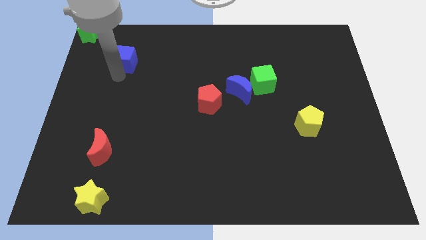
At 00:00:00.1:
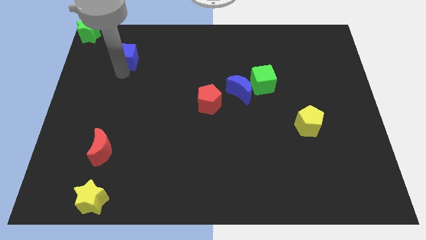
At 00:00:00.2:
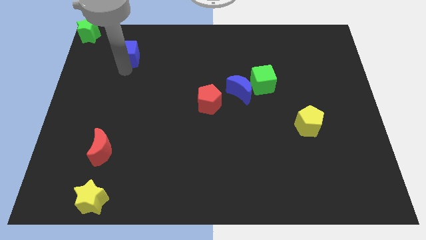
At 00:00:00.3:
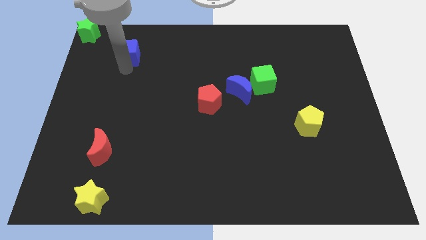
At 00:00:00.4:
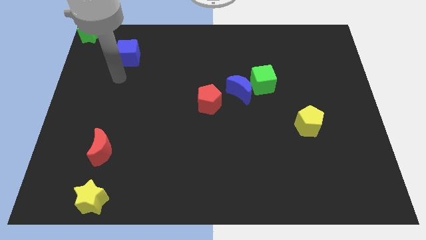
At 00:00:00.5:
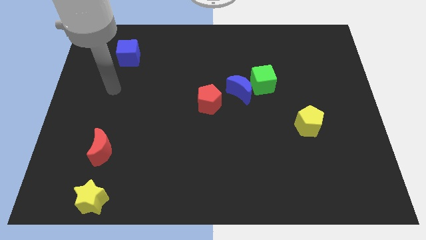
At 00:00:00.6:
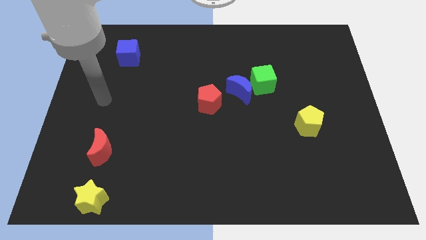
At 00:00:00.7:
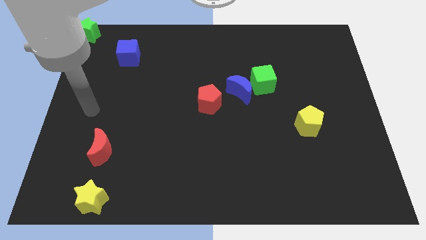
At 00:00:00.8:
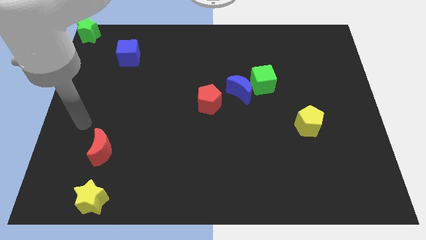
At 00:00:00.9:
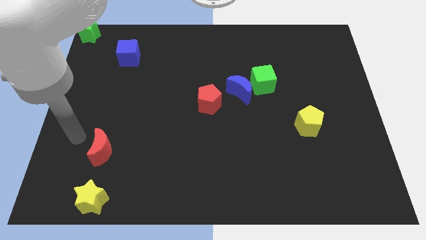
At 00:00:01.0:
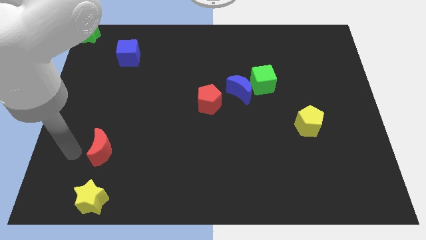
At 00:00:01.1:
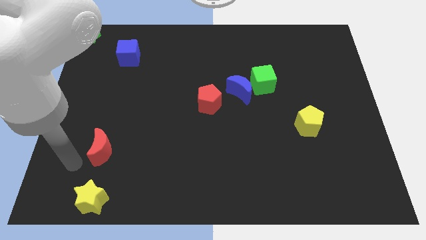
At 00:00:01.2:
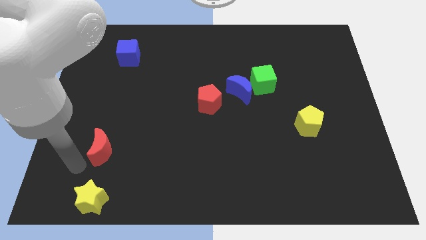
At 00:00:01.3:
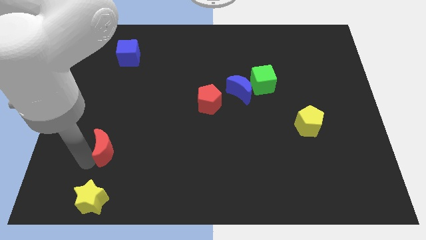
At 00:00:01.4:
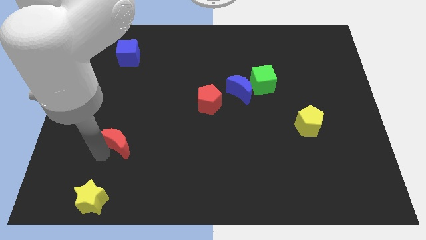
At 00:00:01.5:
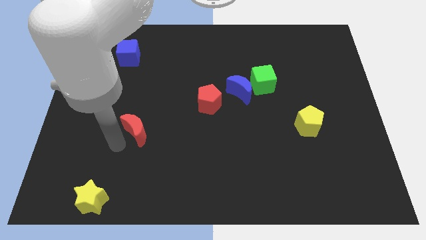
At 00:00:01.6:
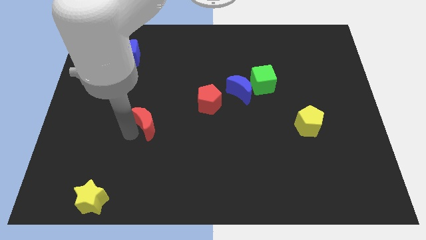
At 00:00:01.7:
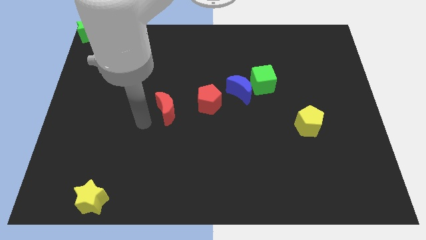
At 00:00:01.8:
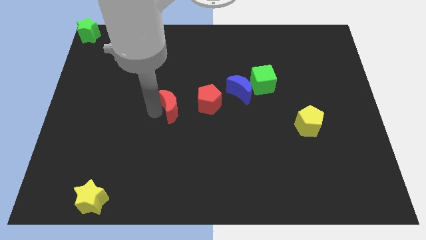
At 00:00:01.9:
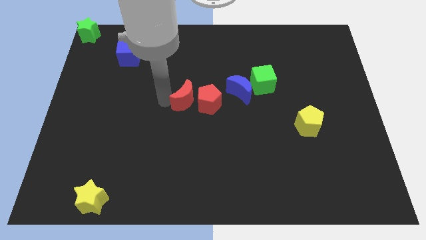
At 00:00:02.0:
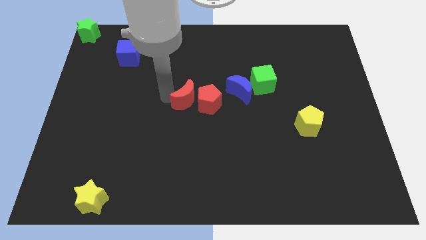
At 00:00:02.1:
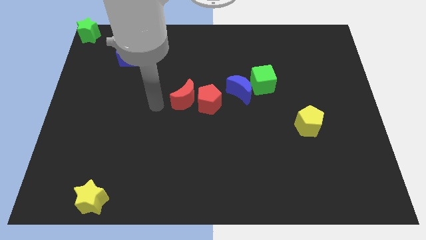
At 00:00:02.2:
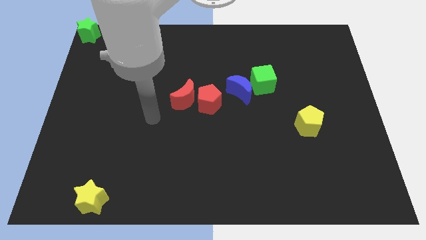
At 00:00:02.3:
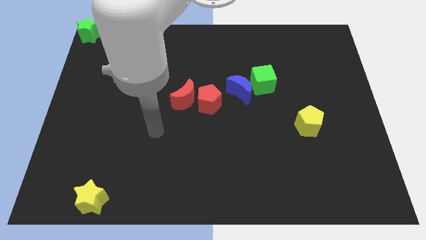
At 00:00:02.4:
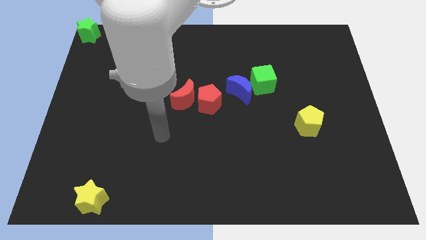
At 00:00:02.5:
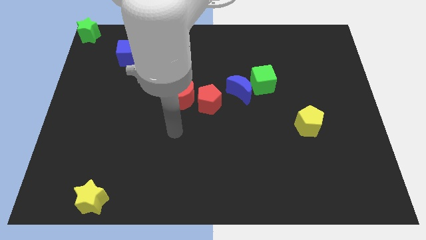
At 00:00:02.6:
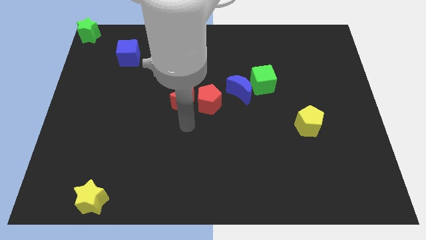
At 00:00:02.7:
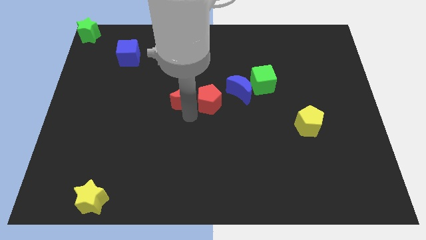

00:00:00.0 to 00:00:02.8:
place the red moon left to the red pentagon

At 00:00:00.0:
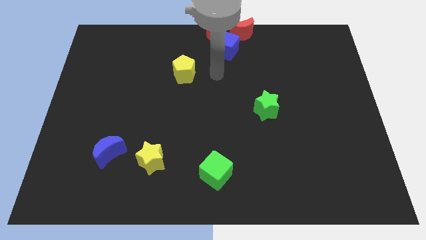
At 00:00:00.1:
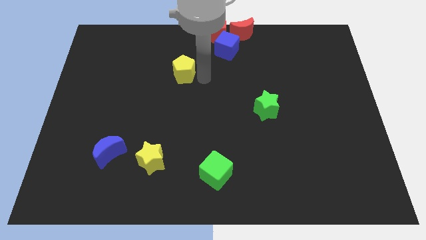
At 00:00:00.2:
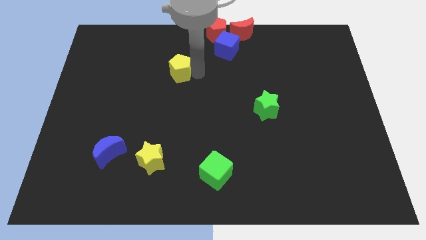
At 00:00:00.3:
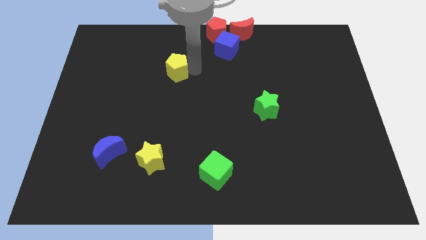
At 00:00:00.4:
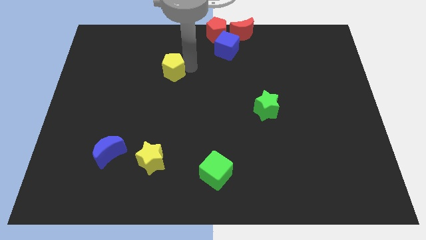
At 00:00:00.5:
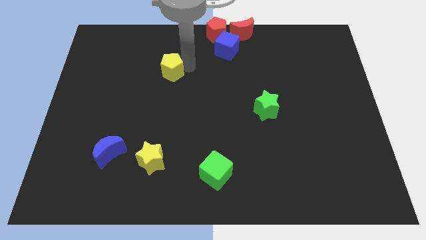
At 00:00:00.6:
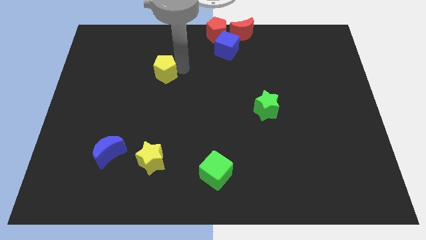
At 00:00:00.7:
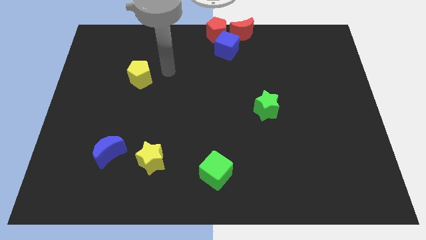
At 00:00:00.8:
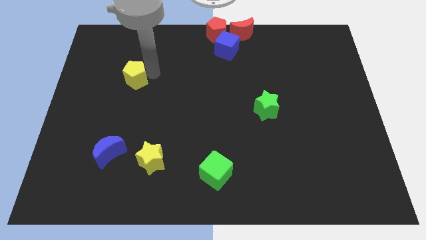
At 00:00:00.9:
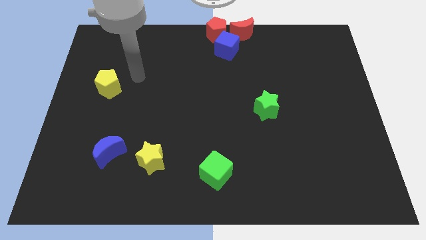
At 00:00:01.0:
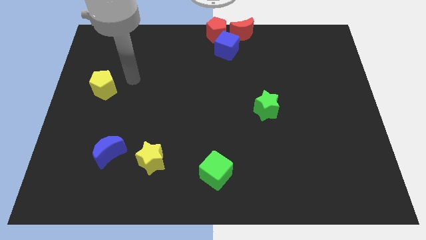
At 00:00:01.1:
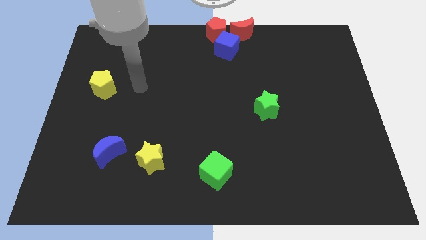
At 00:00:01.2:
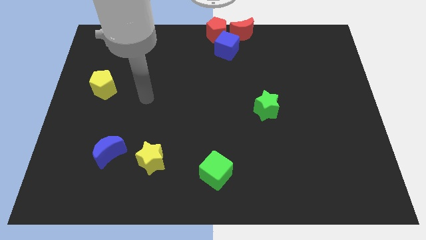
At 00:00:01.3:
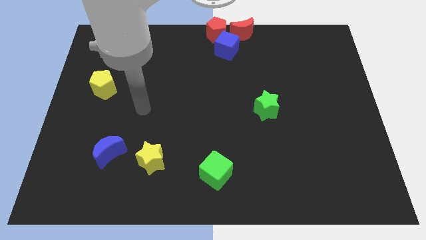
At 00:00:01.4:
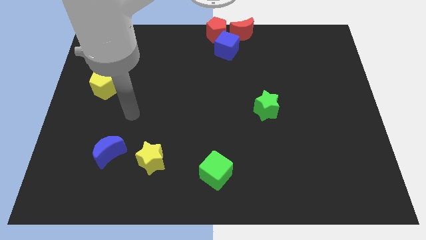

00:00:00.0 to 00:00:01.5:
push the yellow pentagon to the left side of the board

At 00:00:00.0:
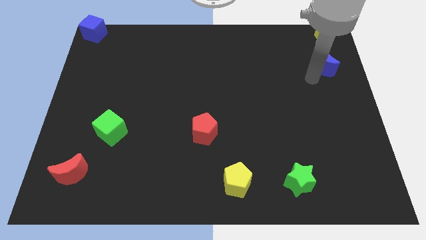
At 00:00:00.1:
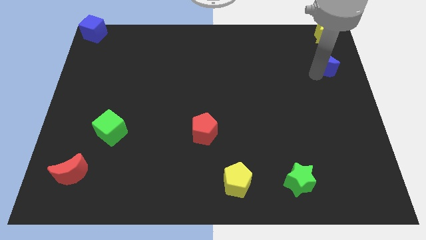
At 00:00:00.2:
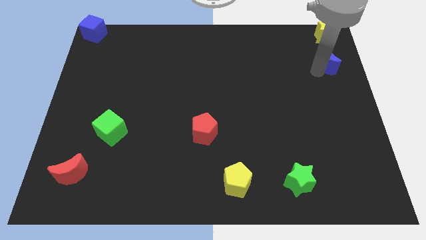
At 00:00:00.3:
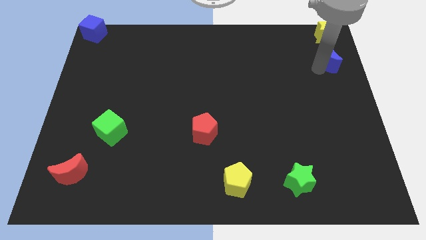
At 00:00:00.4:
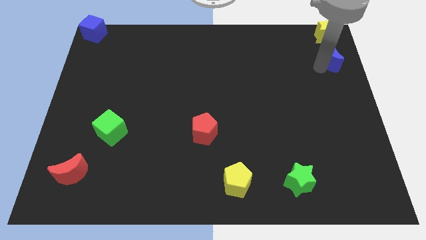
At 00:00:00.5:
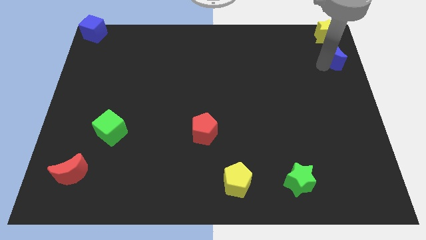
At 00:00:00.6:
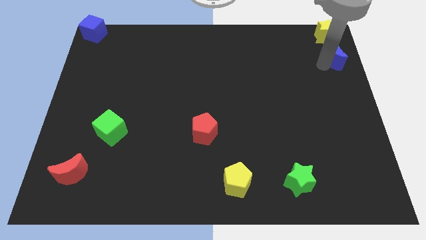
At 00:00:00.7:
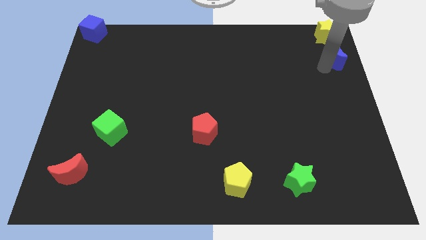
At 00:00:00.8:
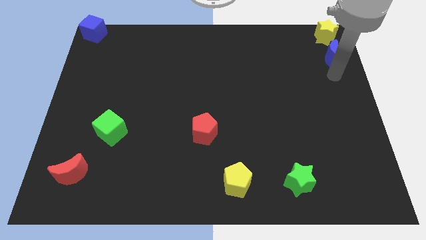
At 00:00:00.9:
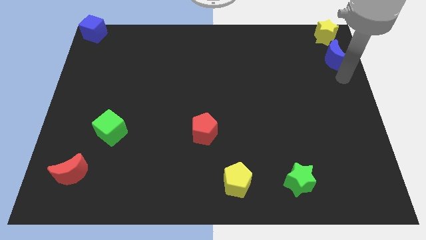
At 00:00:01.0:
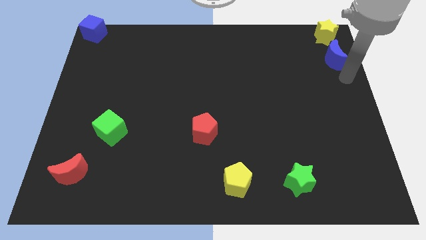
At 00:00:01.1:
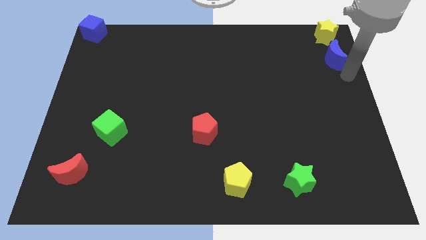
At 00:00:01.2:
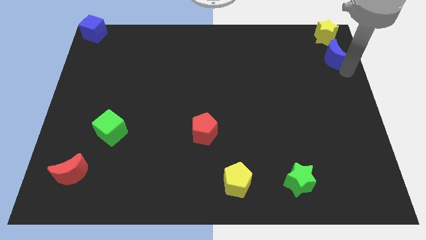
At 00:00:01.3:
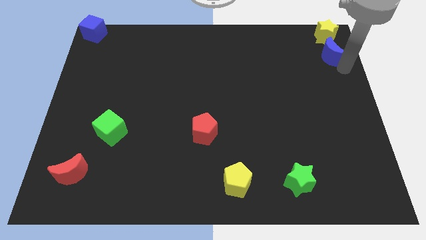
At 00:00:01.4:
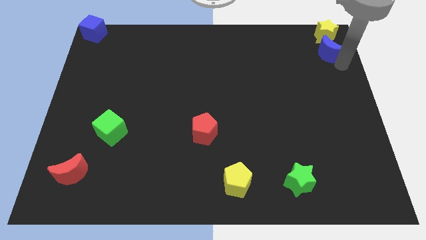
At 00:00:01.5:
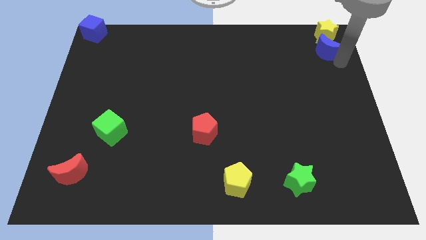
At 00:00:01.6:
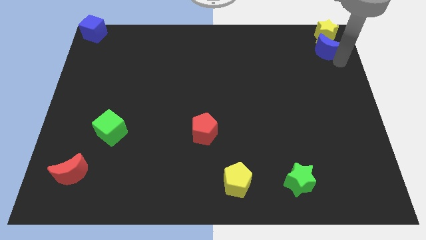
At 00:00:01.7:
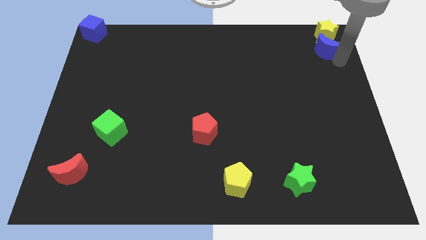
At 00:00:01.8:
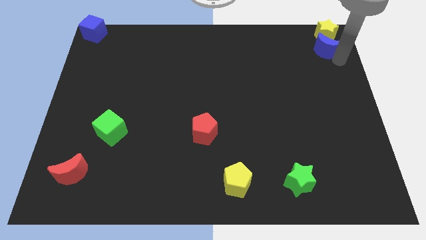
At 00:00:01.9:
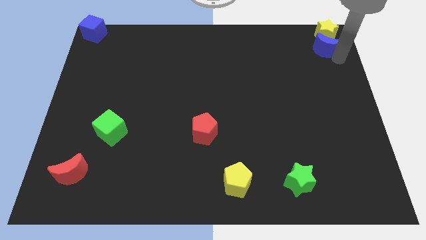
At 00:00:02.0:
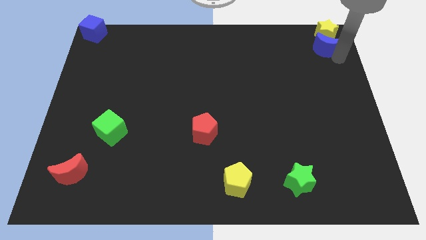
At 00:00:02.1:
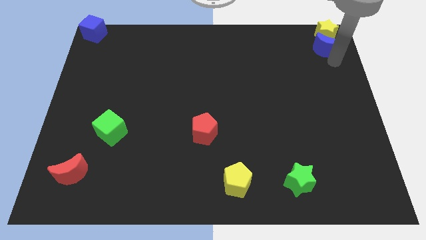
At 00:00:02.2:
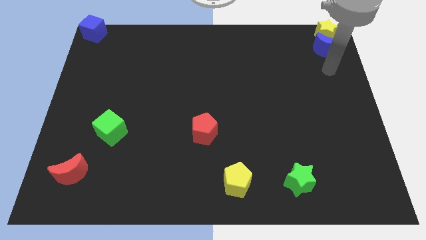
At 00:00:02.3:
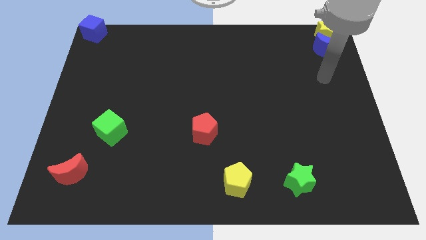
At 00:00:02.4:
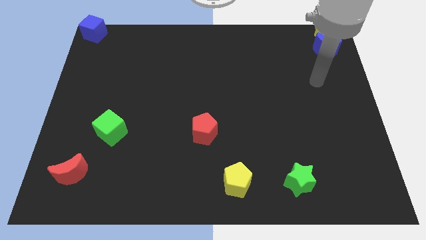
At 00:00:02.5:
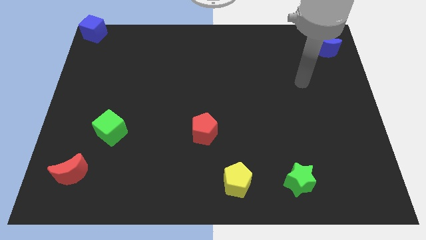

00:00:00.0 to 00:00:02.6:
push the blue crescent close to the yellow pentagon

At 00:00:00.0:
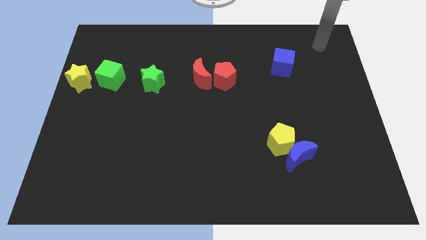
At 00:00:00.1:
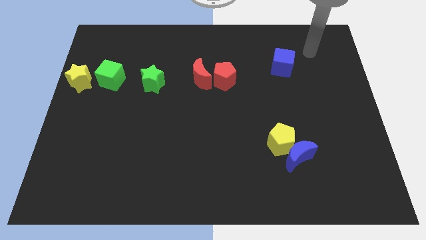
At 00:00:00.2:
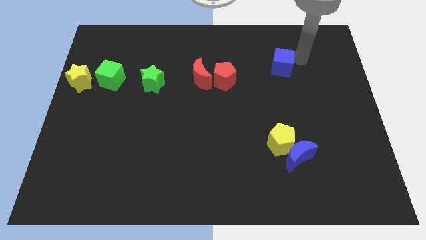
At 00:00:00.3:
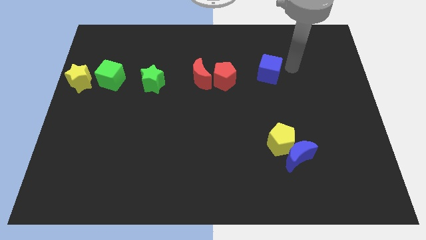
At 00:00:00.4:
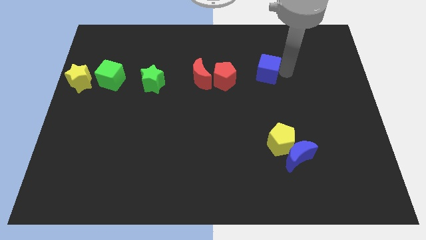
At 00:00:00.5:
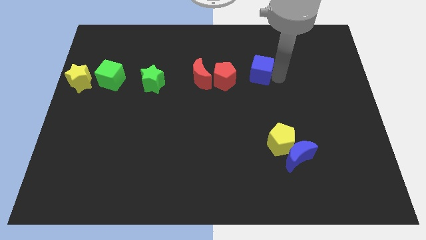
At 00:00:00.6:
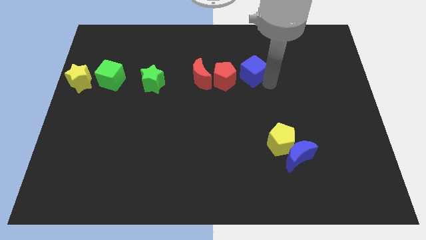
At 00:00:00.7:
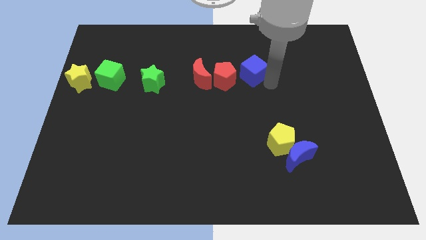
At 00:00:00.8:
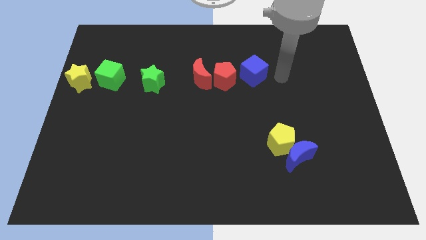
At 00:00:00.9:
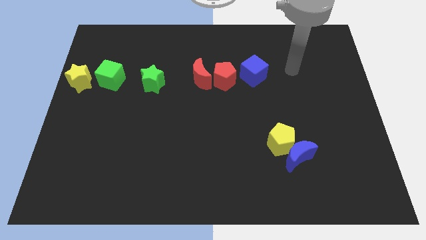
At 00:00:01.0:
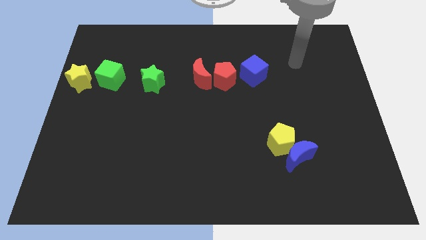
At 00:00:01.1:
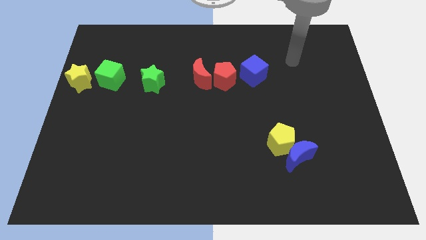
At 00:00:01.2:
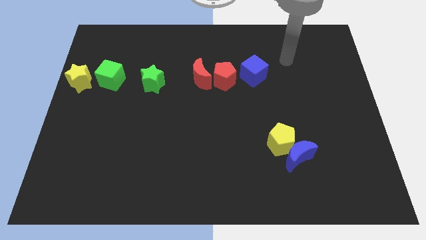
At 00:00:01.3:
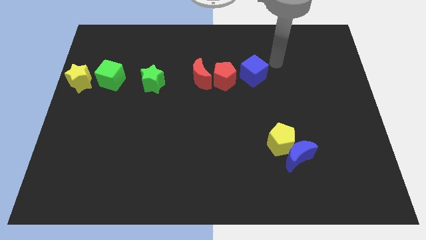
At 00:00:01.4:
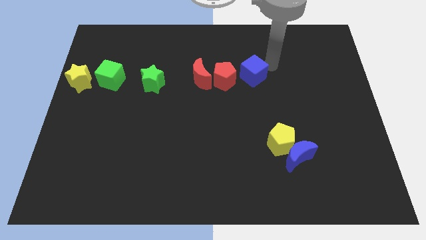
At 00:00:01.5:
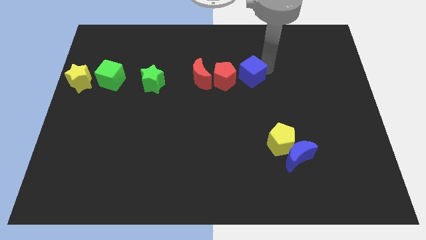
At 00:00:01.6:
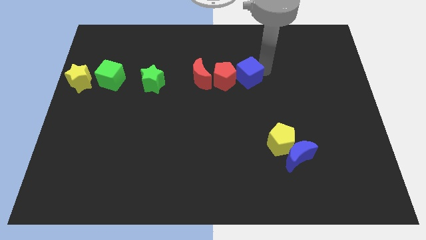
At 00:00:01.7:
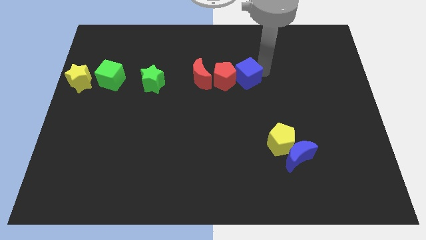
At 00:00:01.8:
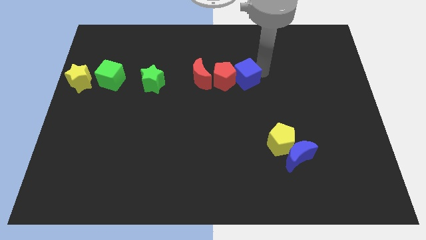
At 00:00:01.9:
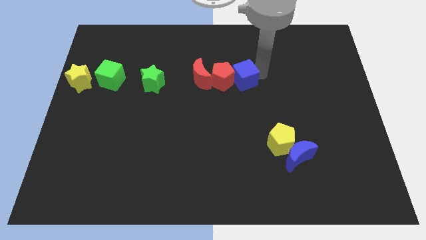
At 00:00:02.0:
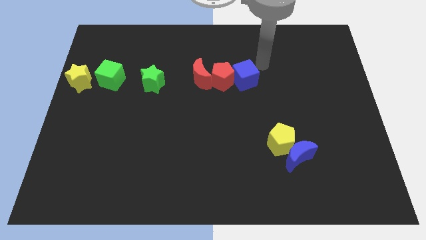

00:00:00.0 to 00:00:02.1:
push blue cube into red pentagon
